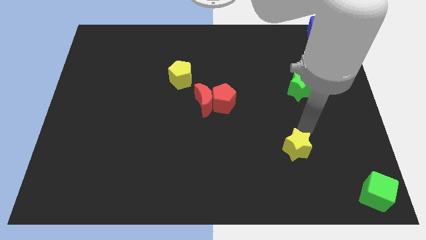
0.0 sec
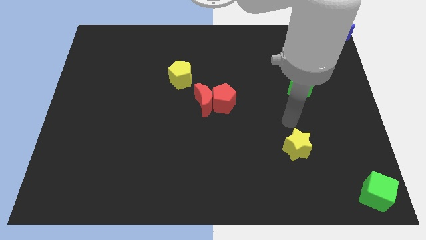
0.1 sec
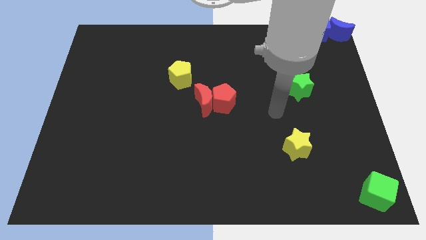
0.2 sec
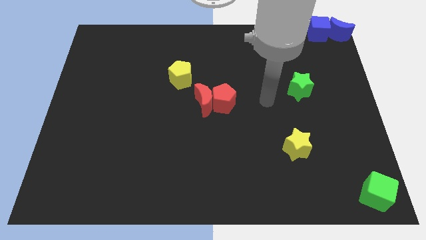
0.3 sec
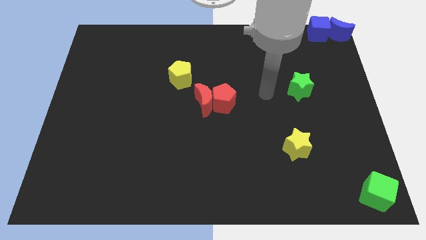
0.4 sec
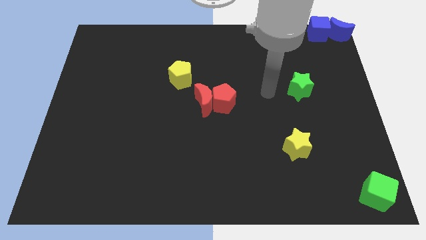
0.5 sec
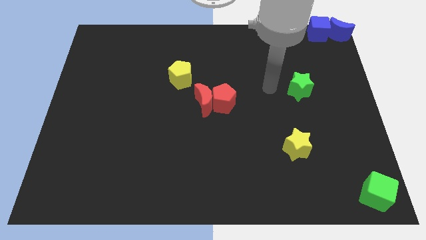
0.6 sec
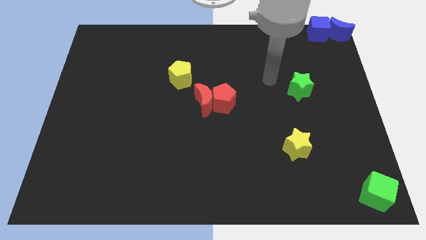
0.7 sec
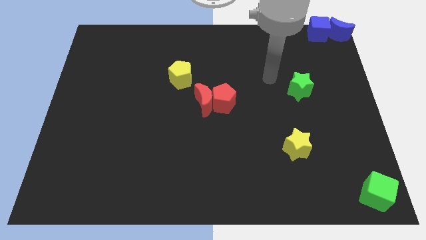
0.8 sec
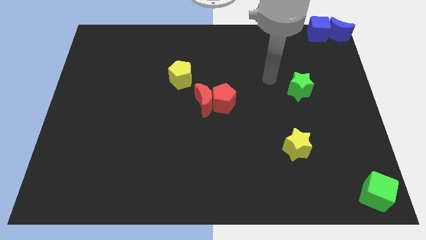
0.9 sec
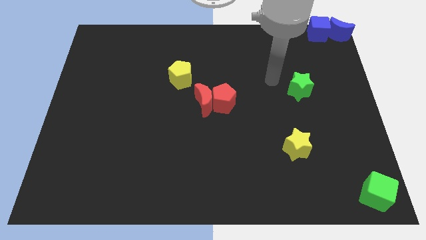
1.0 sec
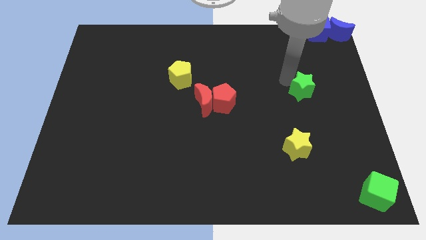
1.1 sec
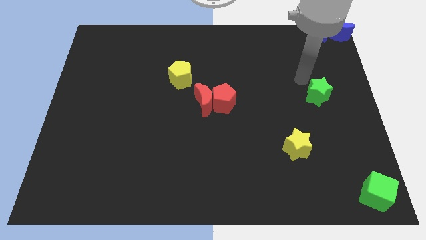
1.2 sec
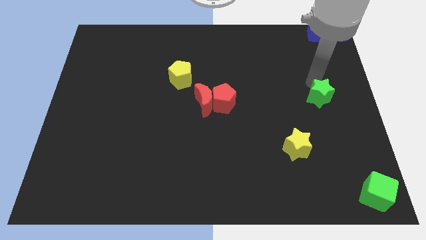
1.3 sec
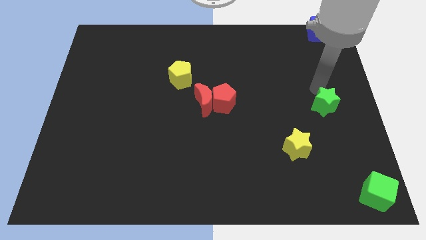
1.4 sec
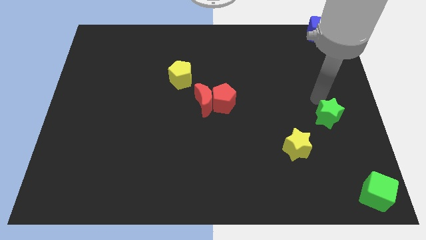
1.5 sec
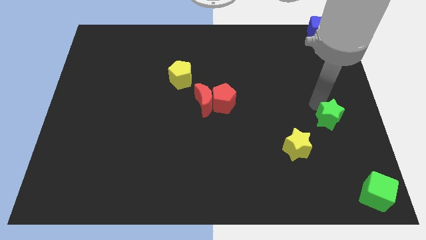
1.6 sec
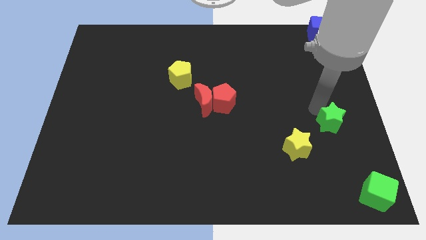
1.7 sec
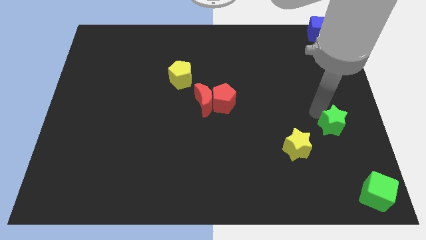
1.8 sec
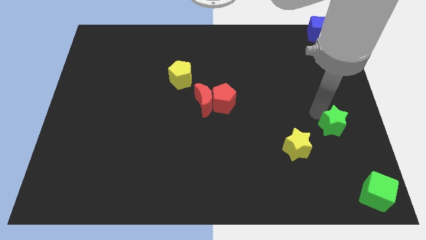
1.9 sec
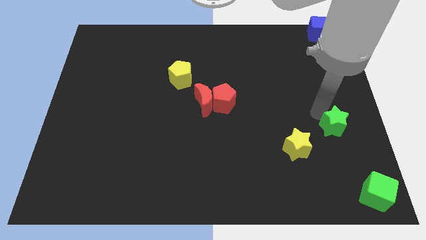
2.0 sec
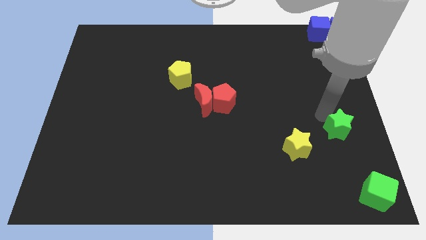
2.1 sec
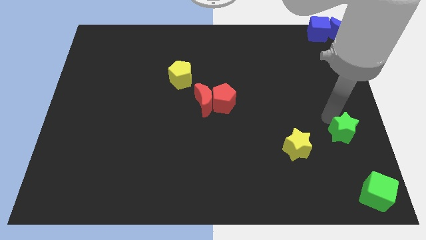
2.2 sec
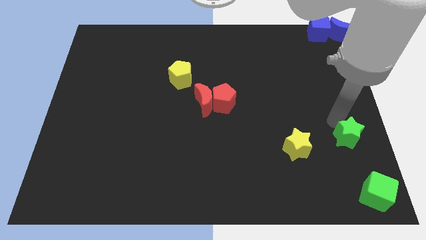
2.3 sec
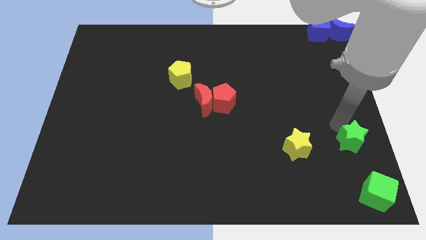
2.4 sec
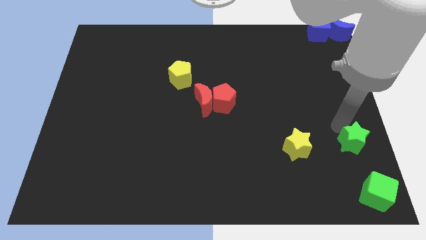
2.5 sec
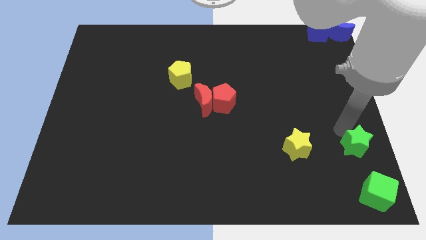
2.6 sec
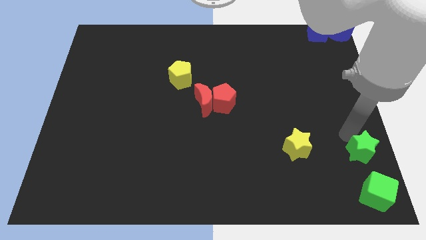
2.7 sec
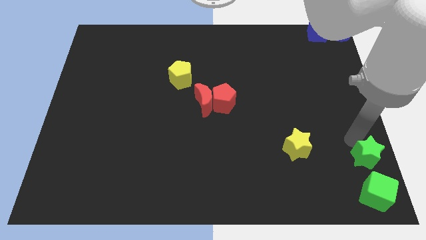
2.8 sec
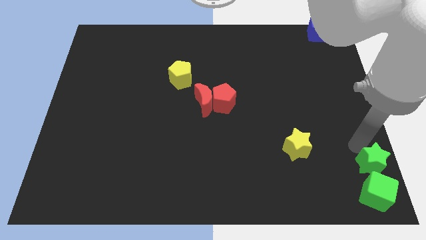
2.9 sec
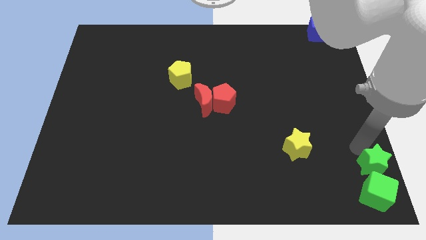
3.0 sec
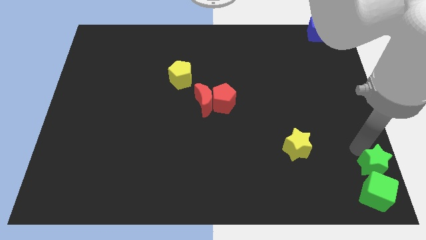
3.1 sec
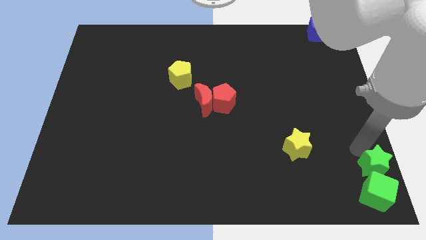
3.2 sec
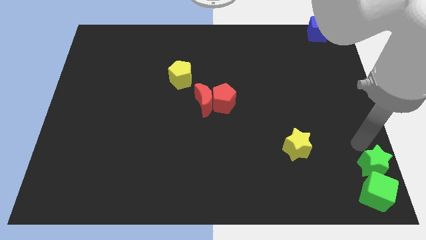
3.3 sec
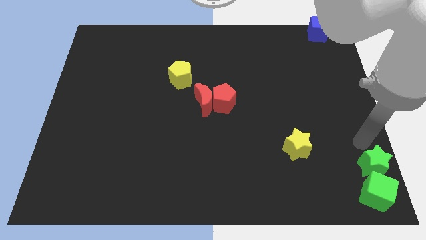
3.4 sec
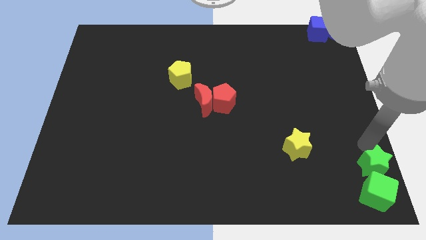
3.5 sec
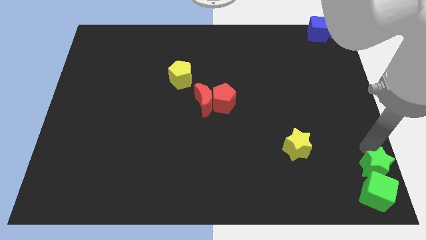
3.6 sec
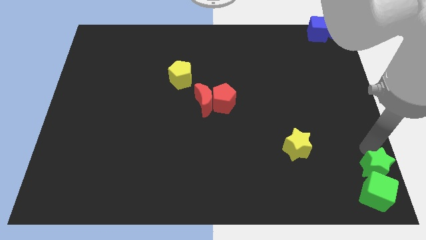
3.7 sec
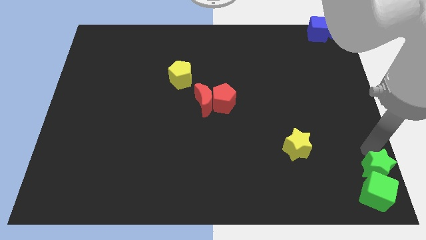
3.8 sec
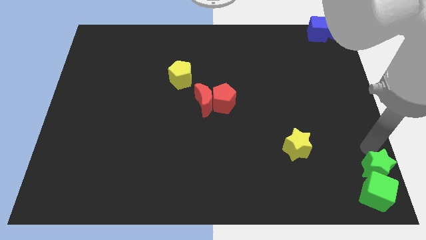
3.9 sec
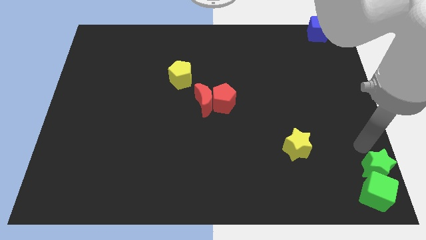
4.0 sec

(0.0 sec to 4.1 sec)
put the green star at the top of the green cube

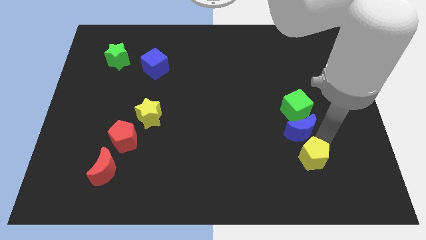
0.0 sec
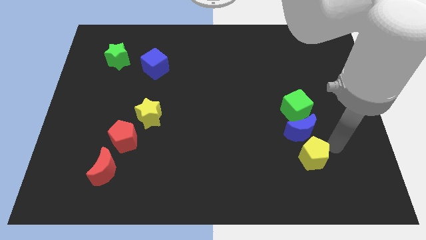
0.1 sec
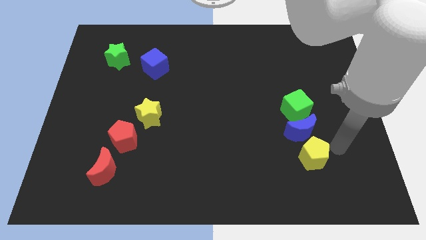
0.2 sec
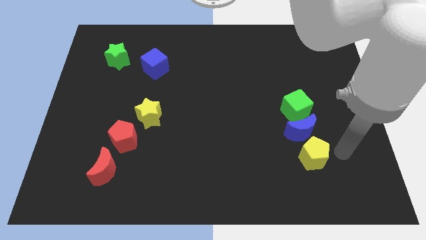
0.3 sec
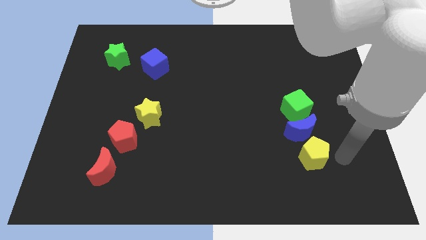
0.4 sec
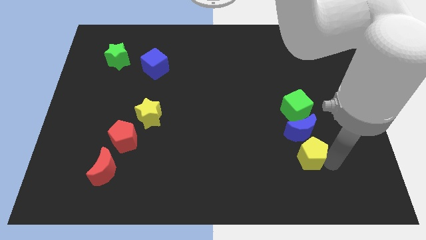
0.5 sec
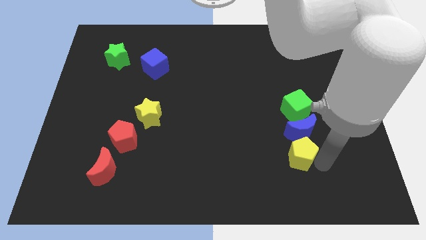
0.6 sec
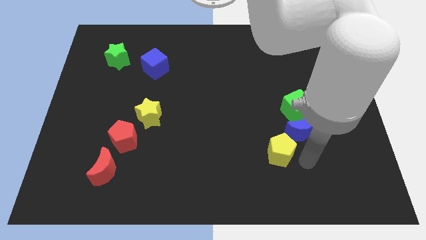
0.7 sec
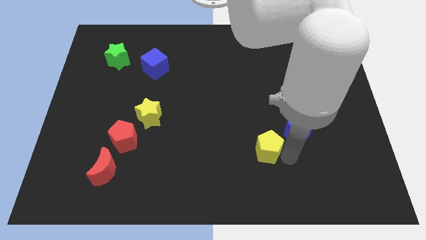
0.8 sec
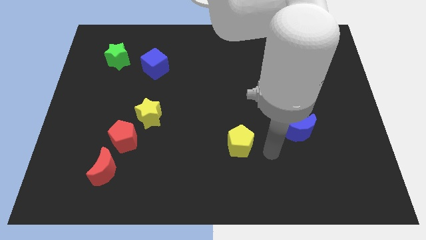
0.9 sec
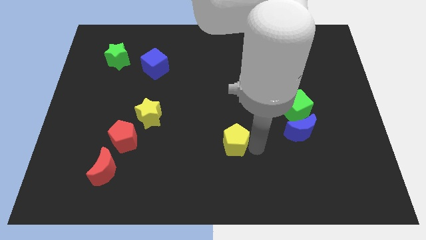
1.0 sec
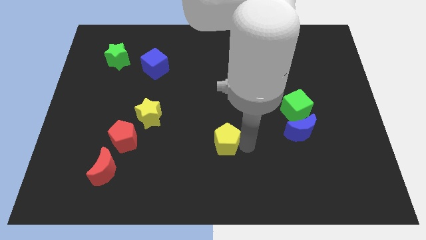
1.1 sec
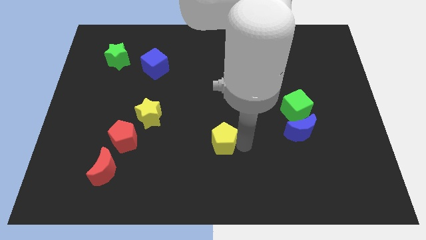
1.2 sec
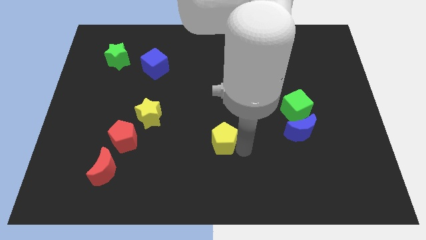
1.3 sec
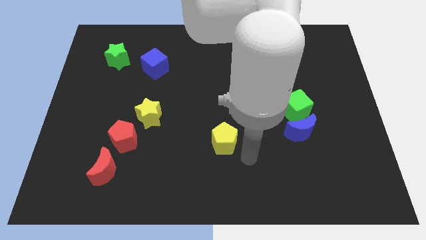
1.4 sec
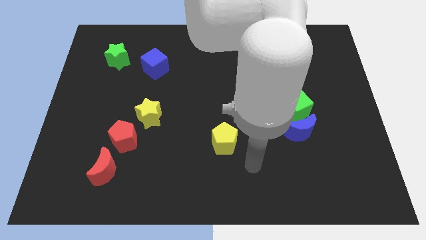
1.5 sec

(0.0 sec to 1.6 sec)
place the yellow pentagon to the right of the red pentagon

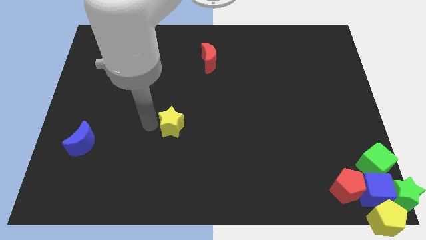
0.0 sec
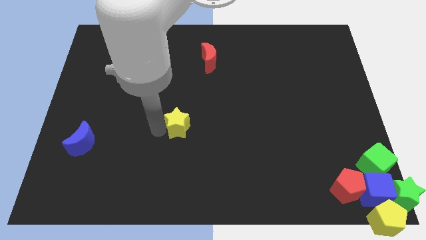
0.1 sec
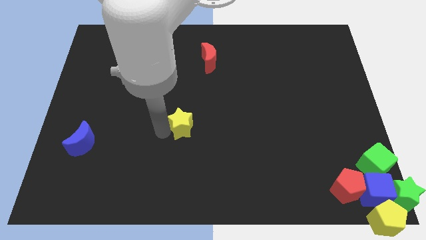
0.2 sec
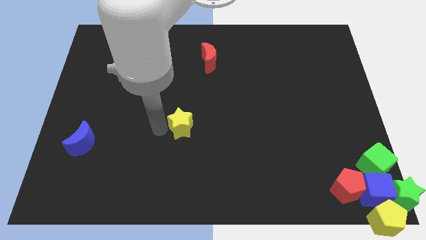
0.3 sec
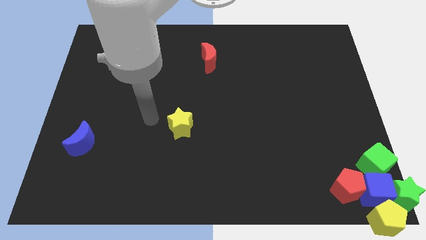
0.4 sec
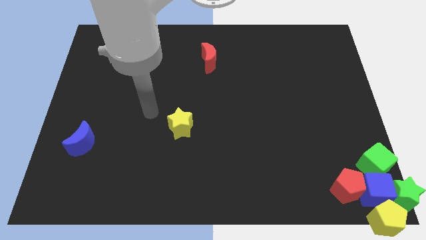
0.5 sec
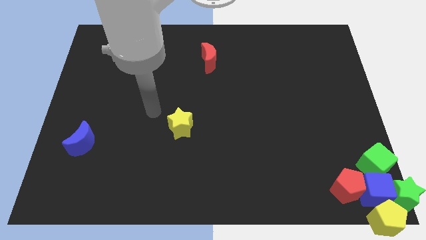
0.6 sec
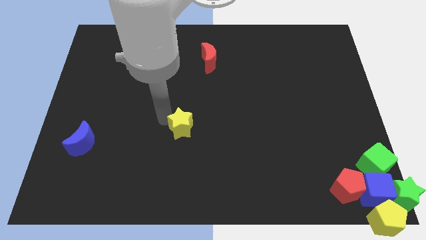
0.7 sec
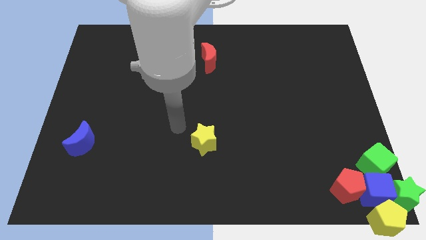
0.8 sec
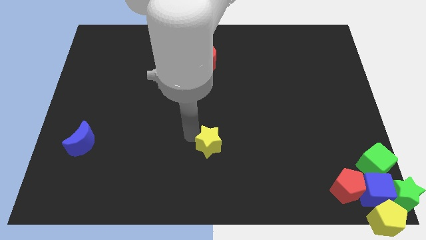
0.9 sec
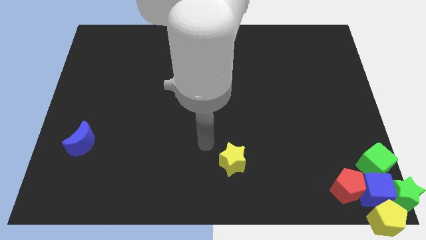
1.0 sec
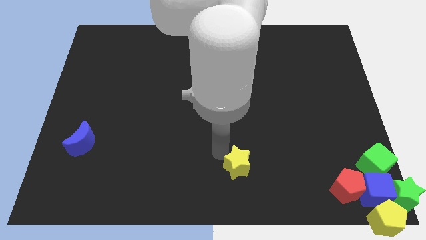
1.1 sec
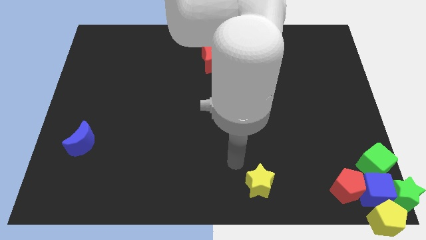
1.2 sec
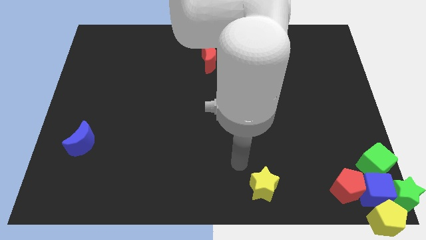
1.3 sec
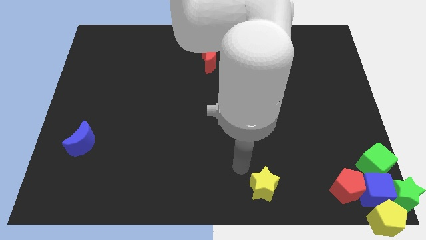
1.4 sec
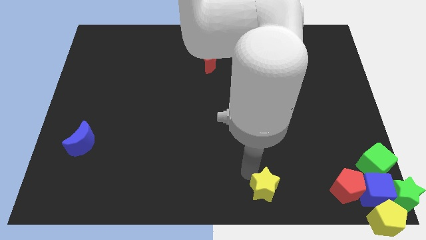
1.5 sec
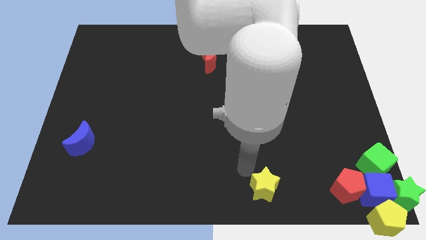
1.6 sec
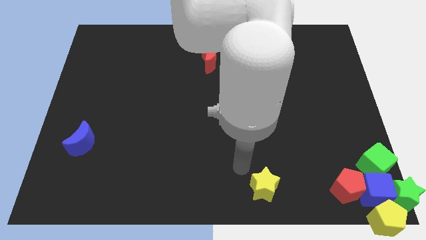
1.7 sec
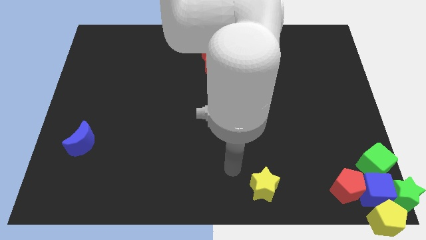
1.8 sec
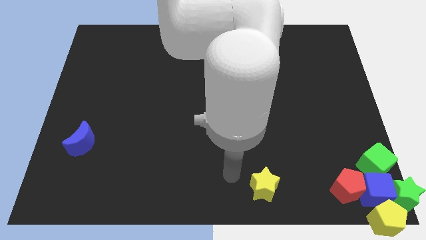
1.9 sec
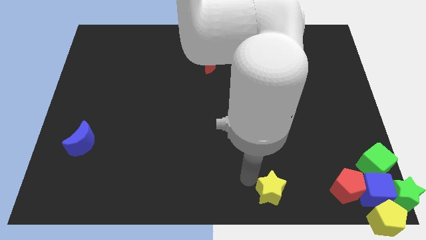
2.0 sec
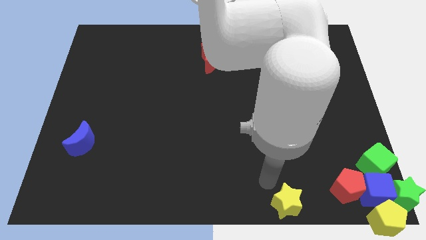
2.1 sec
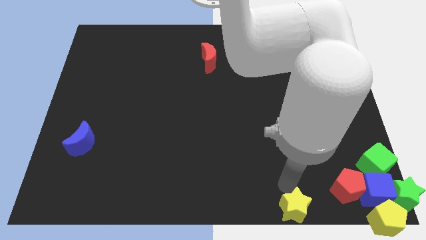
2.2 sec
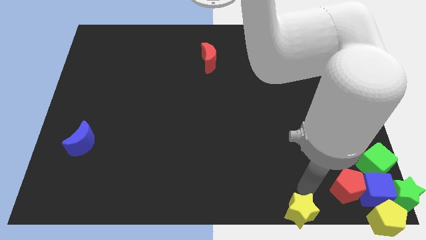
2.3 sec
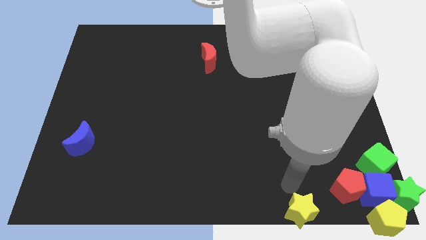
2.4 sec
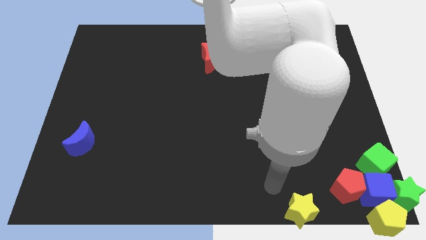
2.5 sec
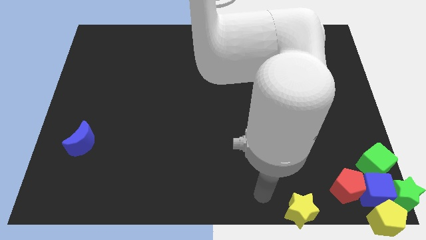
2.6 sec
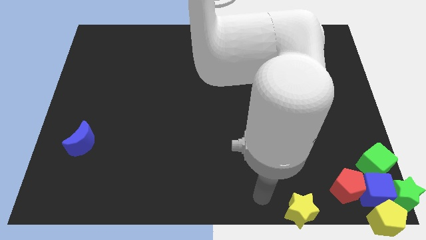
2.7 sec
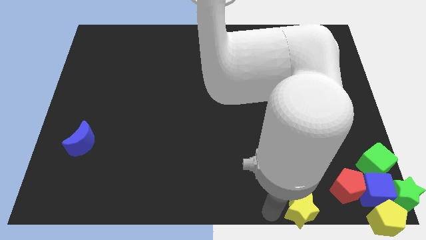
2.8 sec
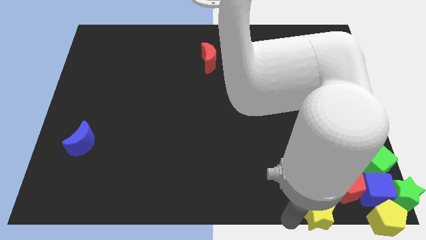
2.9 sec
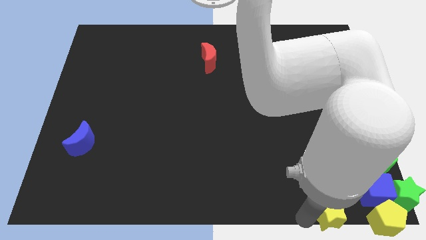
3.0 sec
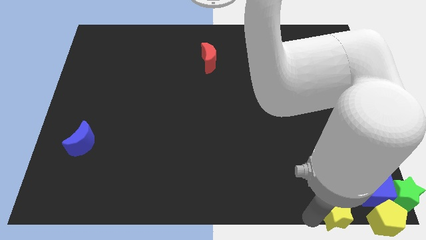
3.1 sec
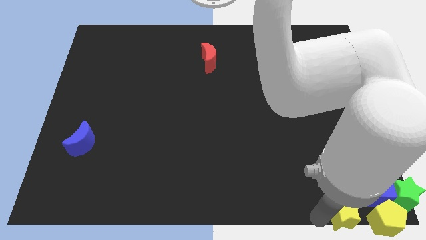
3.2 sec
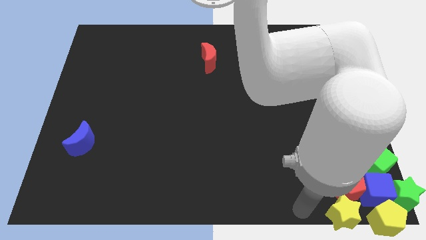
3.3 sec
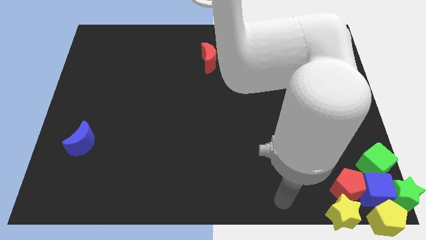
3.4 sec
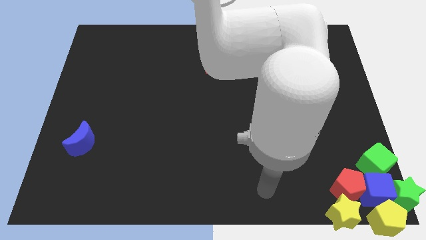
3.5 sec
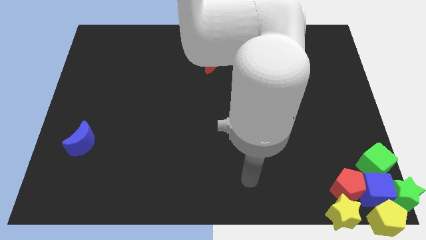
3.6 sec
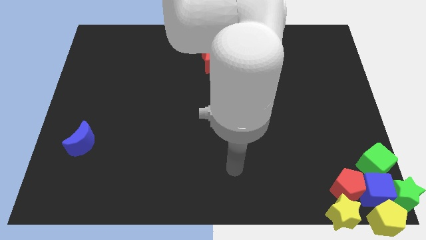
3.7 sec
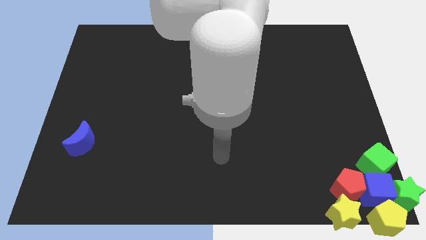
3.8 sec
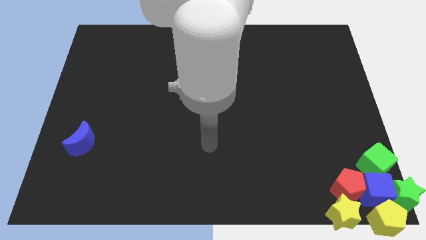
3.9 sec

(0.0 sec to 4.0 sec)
put the yellow star below the red pentagon
